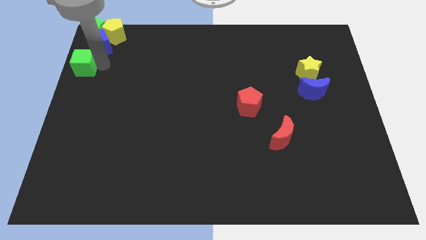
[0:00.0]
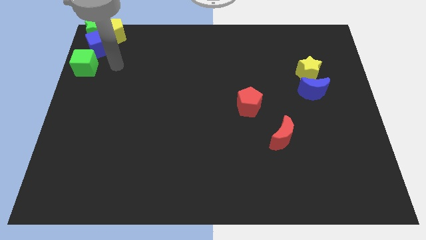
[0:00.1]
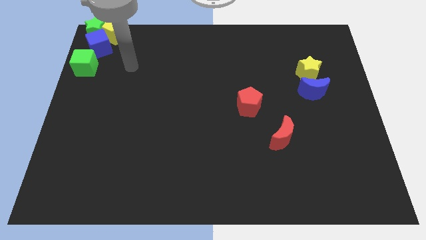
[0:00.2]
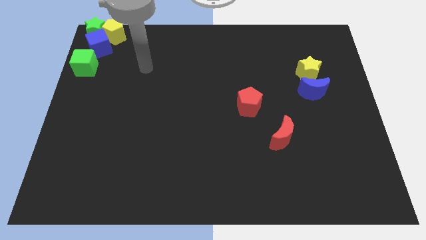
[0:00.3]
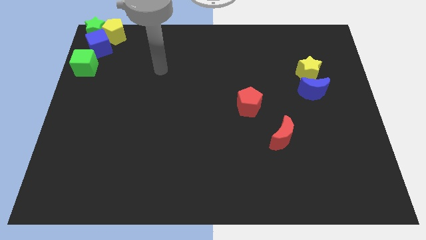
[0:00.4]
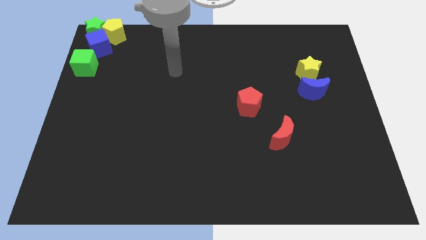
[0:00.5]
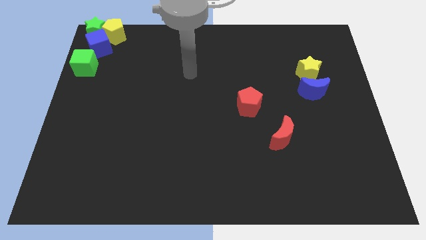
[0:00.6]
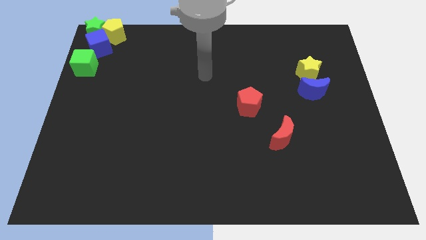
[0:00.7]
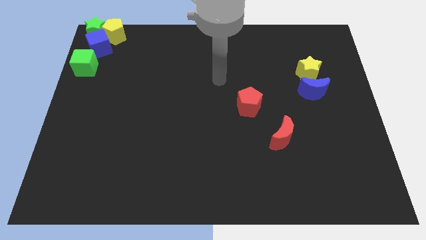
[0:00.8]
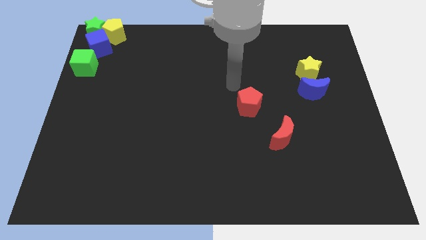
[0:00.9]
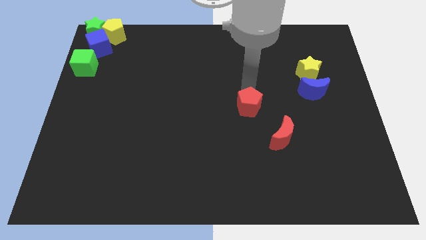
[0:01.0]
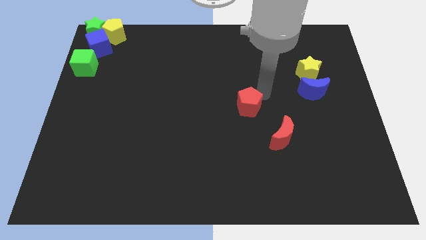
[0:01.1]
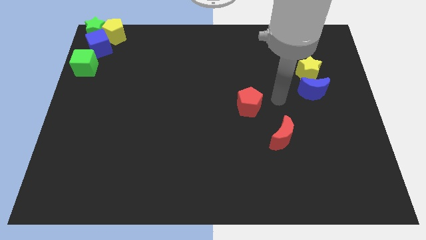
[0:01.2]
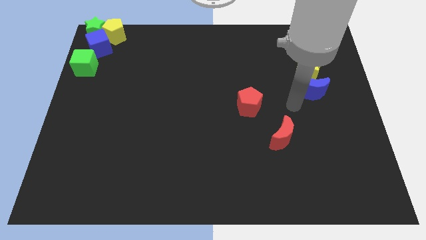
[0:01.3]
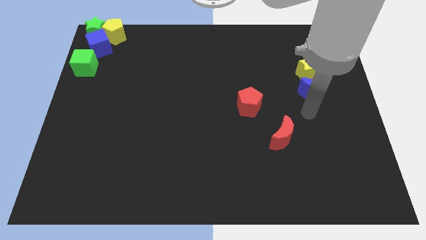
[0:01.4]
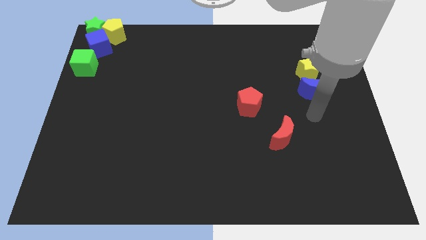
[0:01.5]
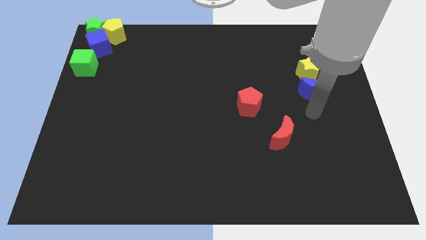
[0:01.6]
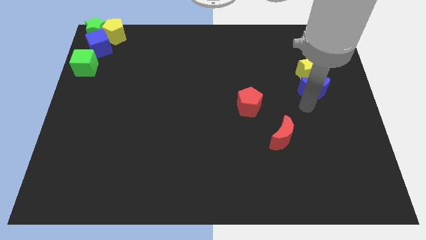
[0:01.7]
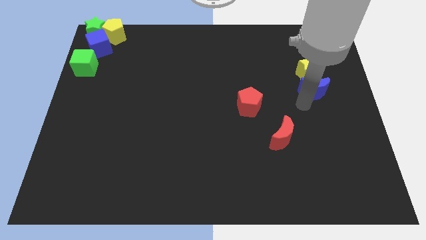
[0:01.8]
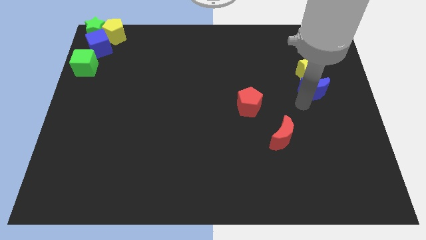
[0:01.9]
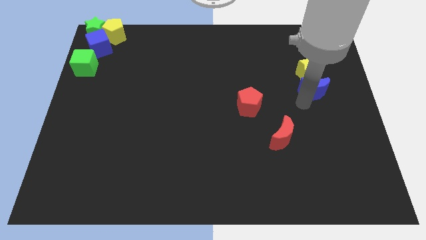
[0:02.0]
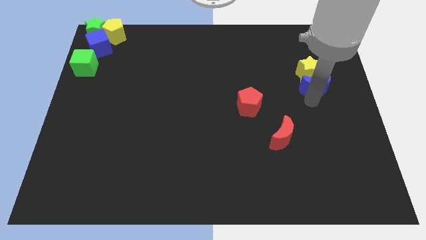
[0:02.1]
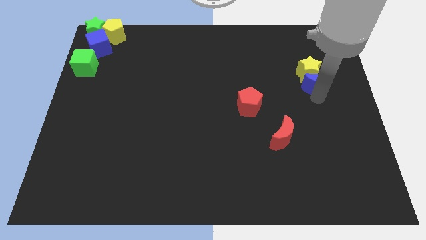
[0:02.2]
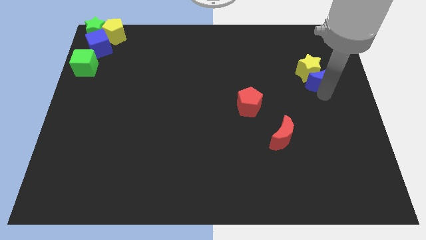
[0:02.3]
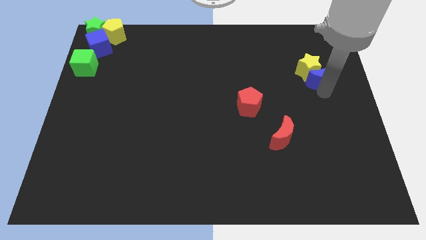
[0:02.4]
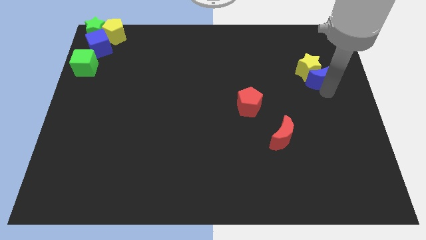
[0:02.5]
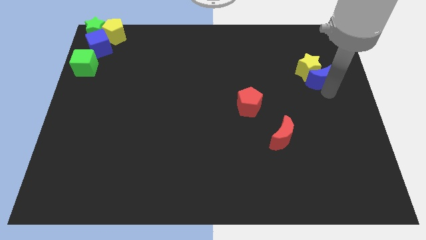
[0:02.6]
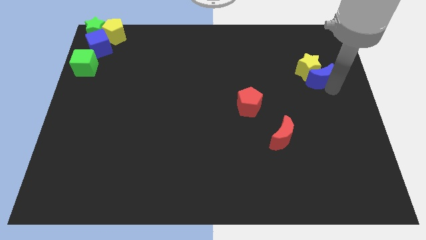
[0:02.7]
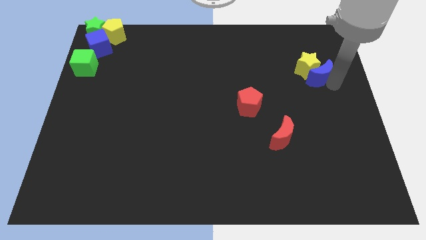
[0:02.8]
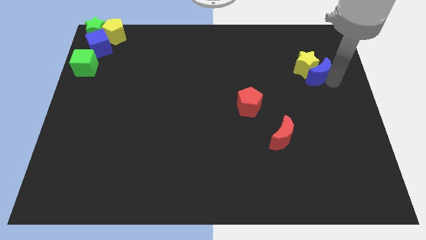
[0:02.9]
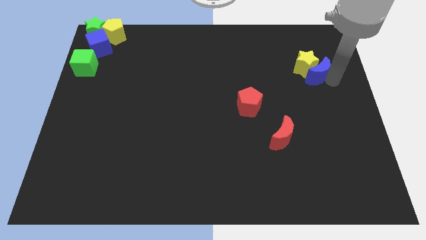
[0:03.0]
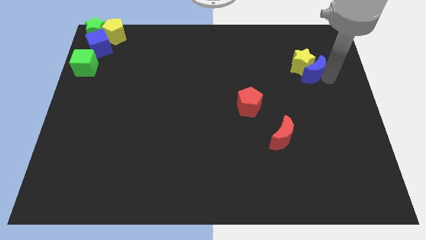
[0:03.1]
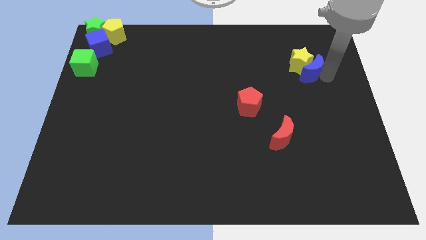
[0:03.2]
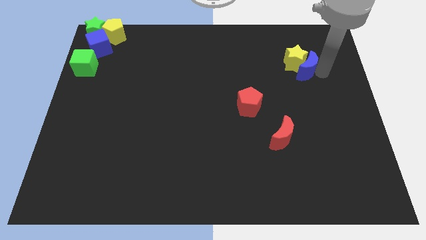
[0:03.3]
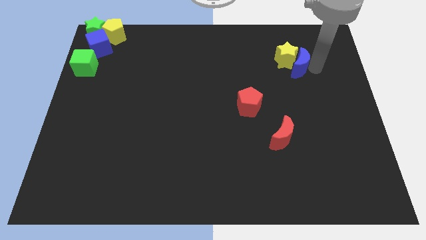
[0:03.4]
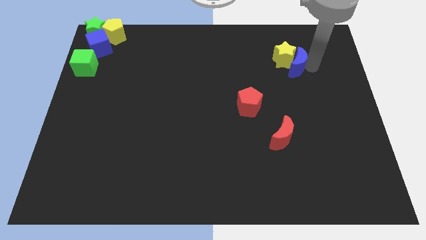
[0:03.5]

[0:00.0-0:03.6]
slightly push the yellow star with the blue moon

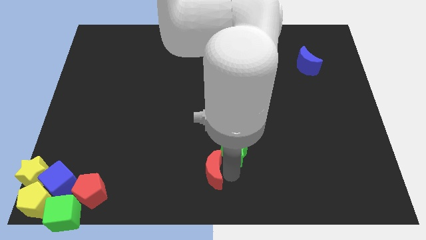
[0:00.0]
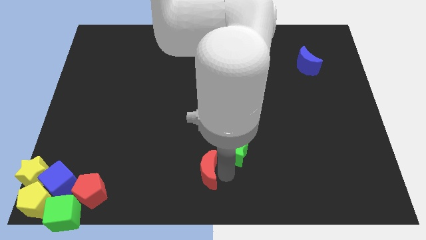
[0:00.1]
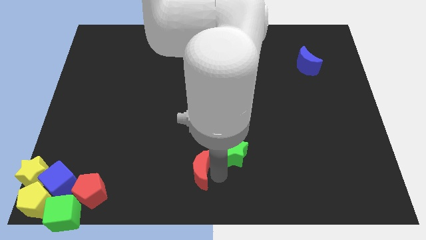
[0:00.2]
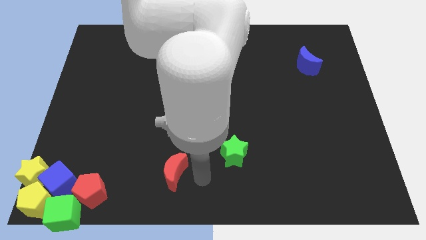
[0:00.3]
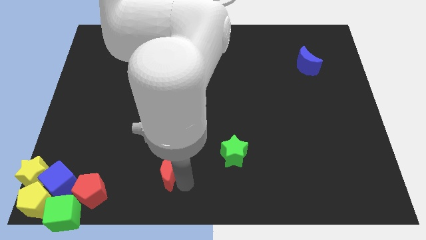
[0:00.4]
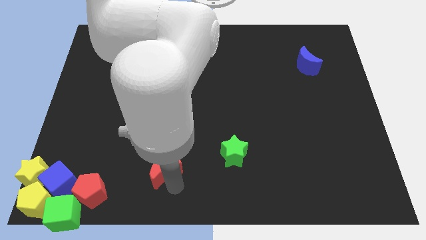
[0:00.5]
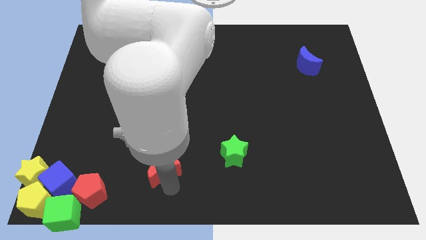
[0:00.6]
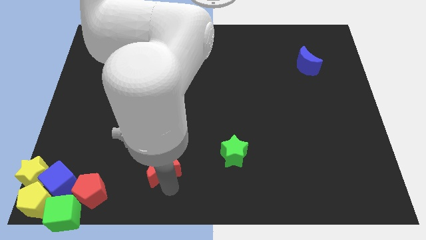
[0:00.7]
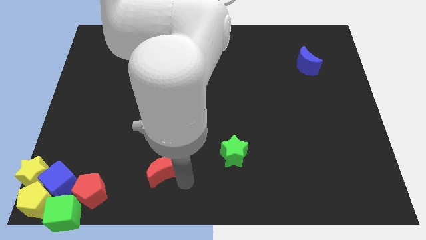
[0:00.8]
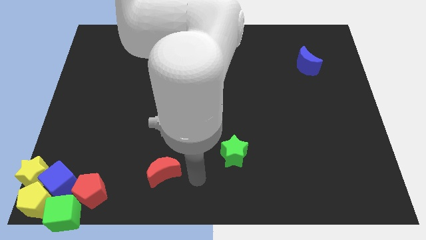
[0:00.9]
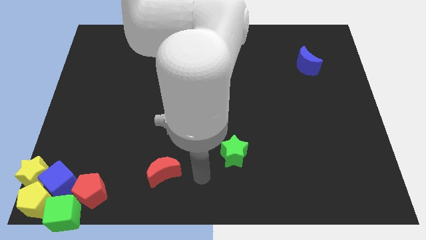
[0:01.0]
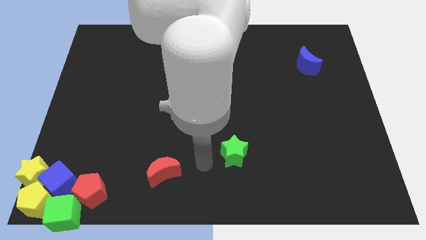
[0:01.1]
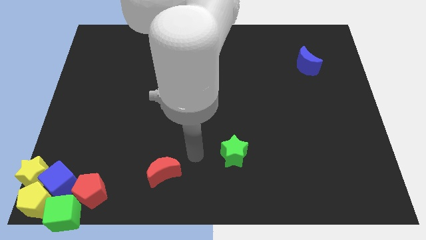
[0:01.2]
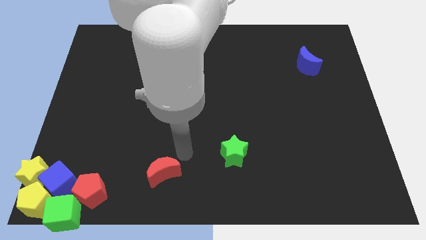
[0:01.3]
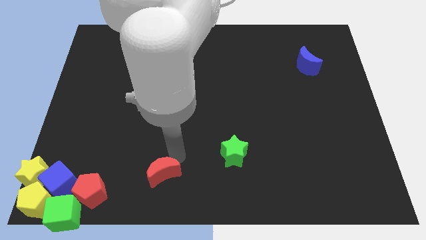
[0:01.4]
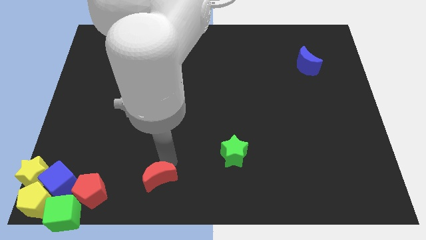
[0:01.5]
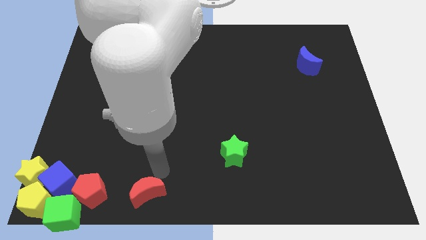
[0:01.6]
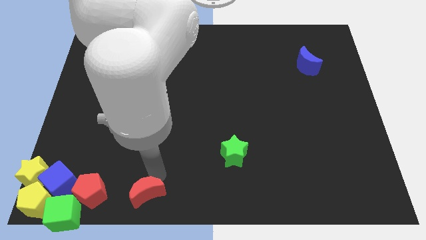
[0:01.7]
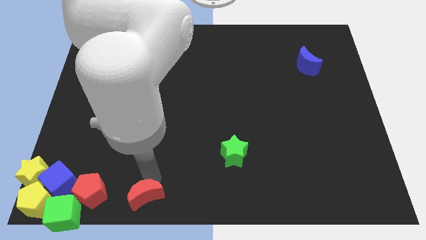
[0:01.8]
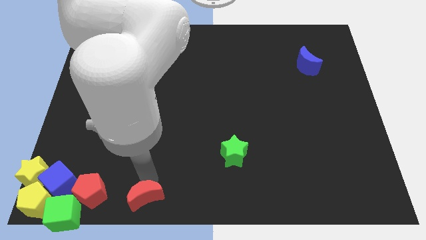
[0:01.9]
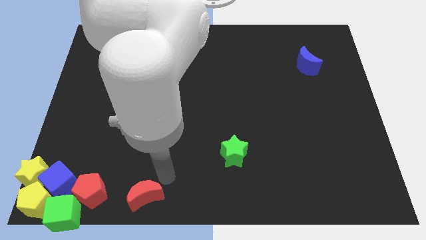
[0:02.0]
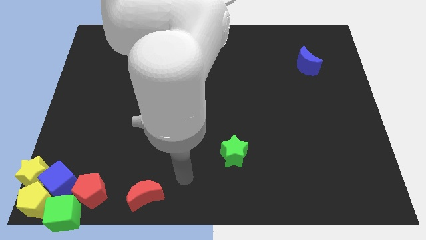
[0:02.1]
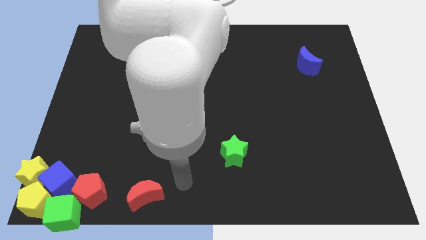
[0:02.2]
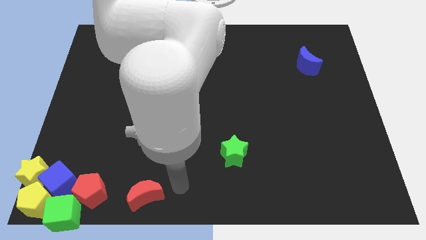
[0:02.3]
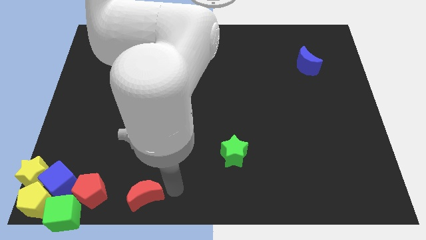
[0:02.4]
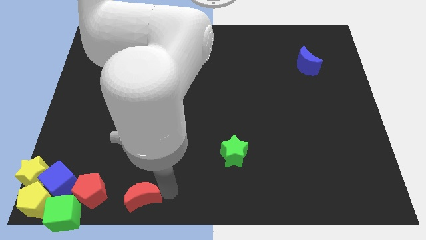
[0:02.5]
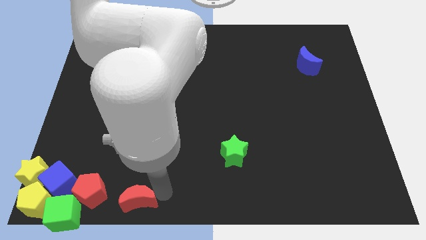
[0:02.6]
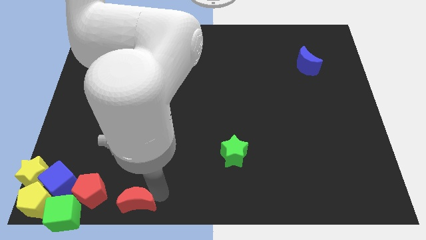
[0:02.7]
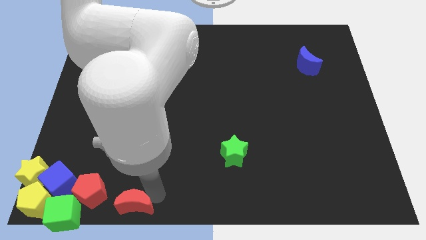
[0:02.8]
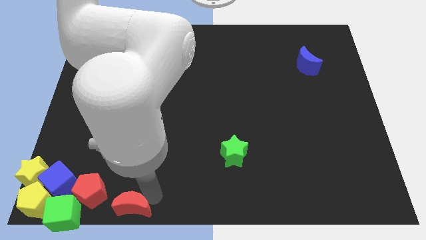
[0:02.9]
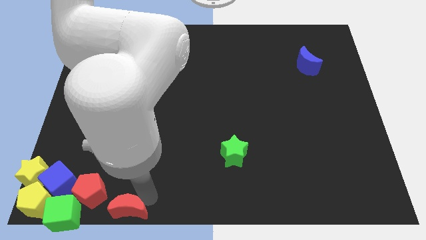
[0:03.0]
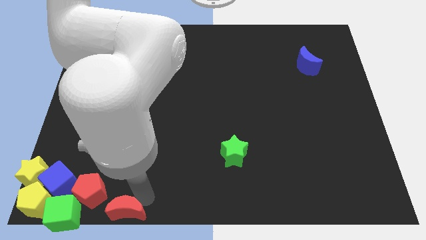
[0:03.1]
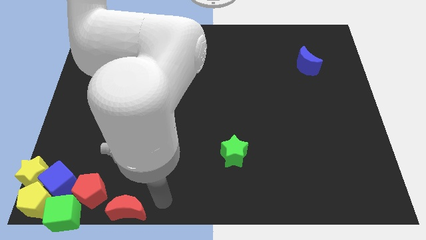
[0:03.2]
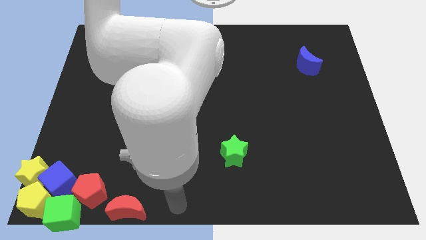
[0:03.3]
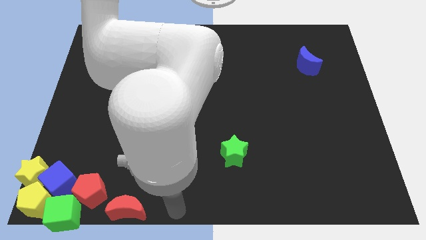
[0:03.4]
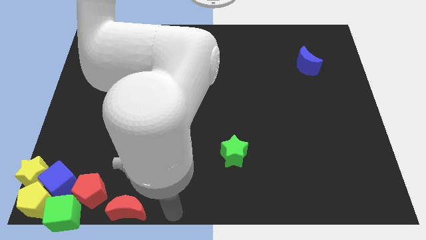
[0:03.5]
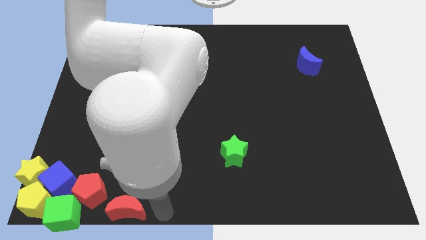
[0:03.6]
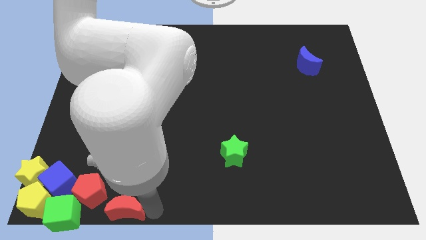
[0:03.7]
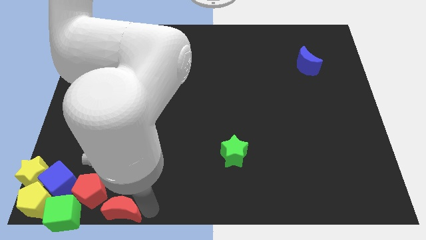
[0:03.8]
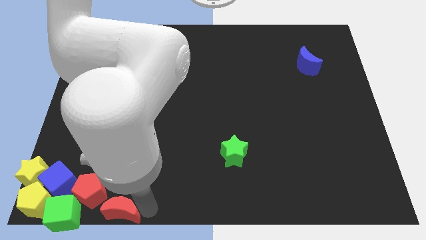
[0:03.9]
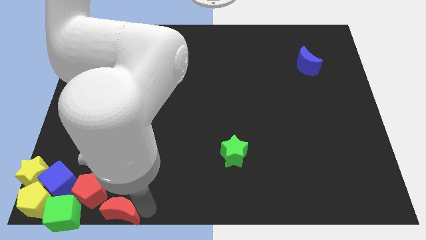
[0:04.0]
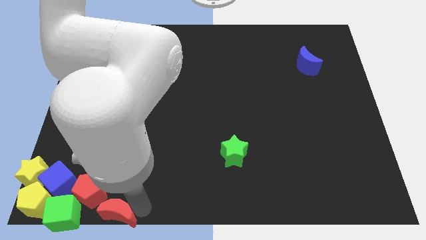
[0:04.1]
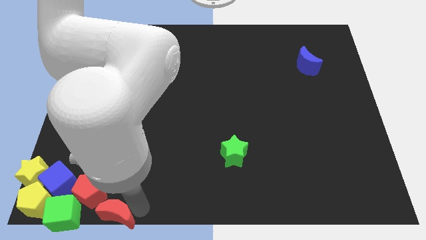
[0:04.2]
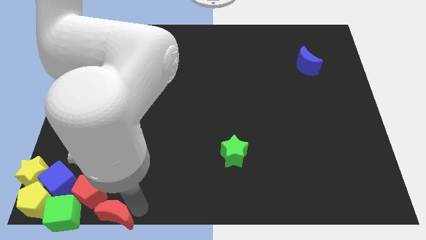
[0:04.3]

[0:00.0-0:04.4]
place the red crescent into the group of blocks

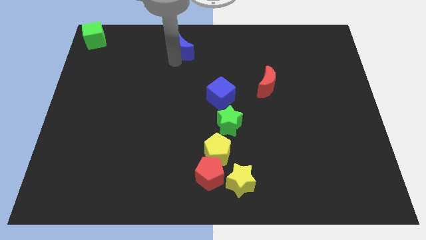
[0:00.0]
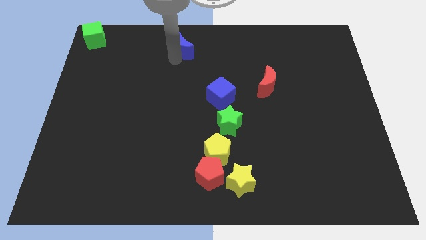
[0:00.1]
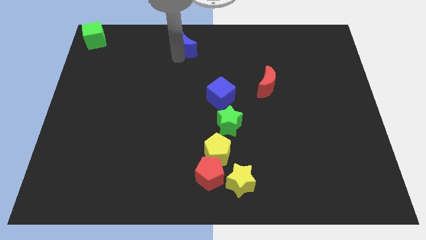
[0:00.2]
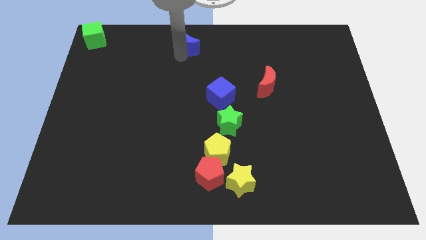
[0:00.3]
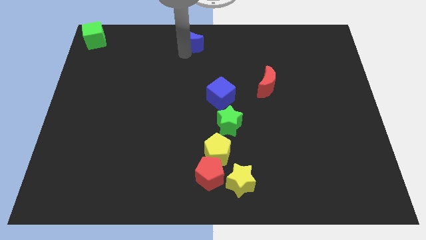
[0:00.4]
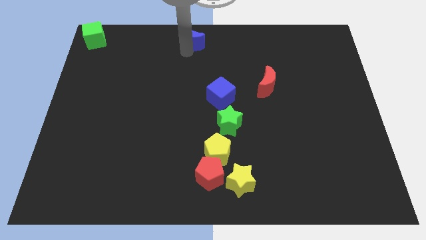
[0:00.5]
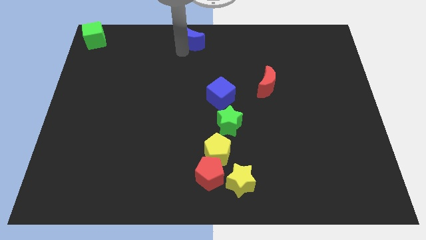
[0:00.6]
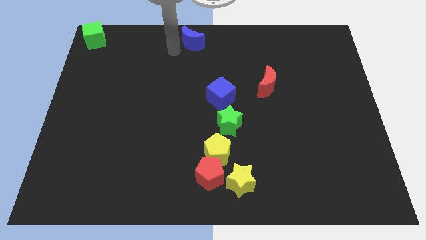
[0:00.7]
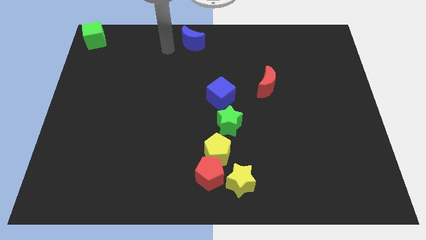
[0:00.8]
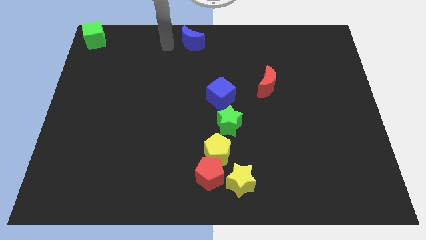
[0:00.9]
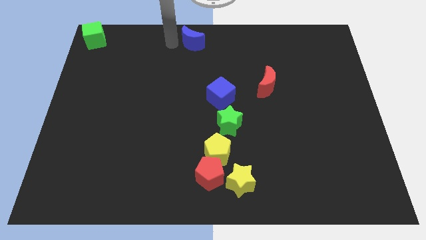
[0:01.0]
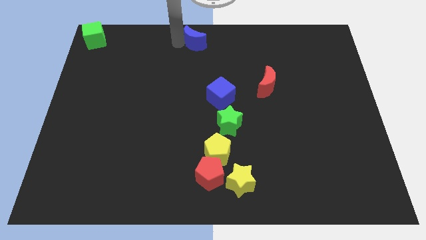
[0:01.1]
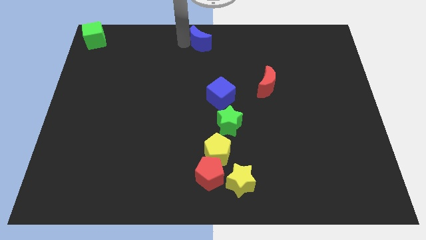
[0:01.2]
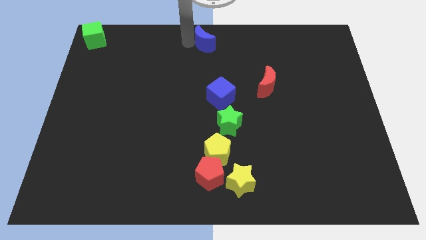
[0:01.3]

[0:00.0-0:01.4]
move blue moon to center top
